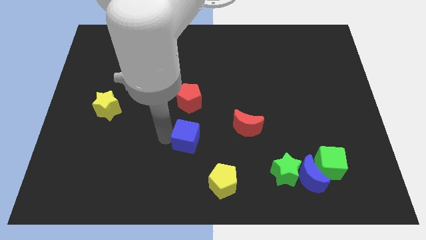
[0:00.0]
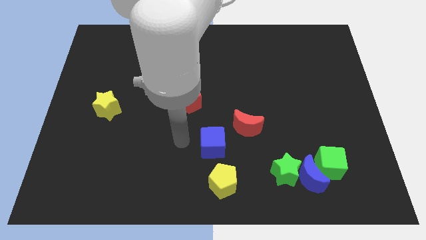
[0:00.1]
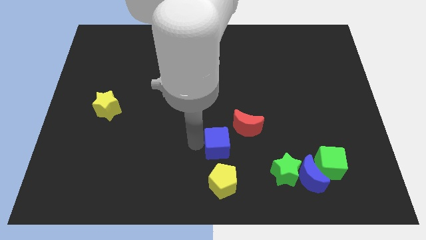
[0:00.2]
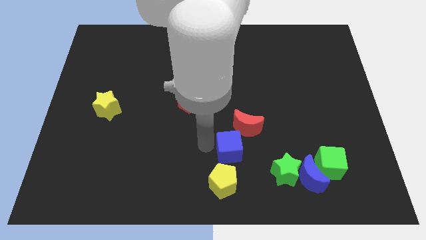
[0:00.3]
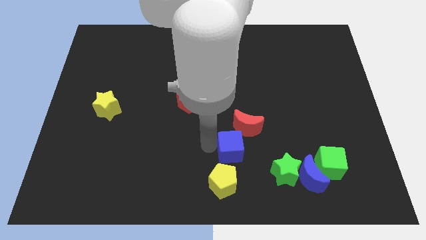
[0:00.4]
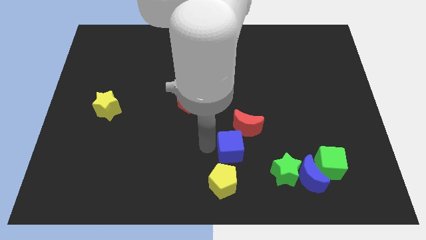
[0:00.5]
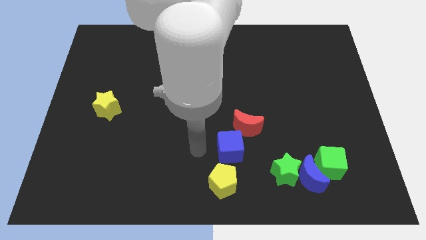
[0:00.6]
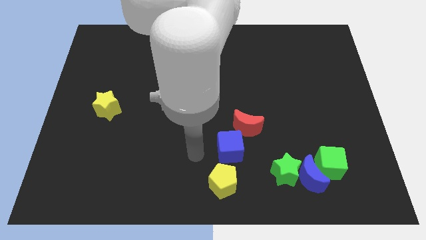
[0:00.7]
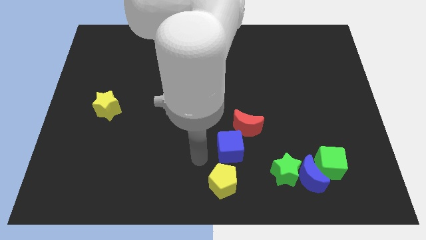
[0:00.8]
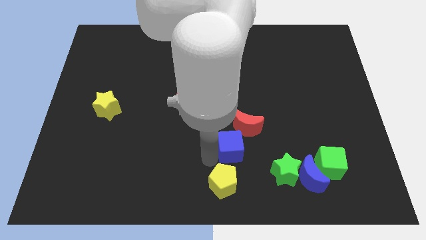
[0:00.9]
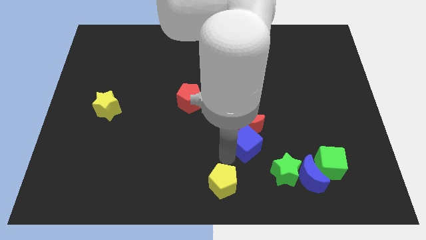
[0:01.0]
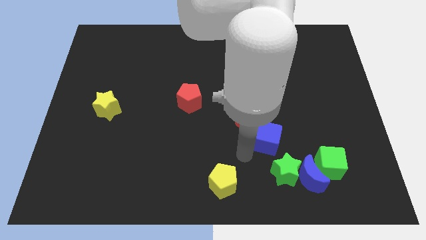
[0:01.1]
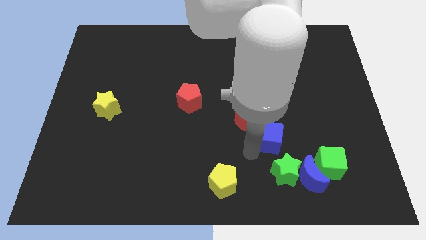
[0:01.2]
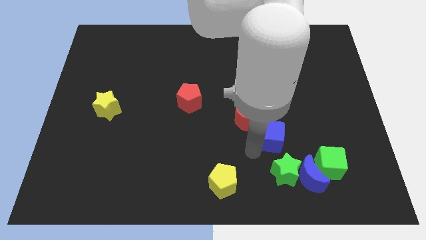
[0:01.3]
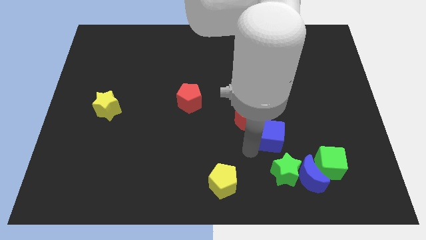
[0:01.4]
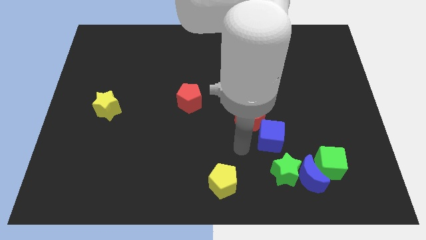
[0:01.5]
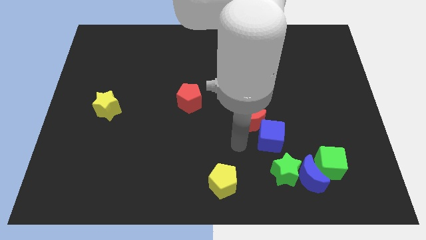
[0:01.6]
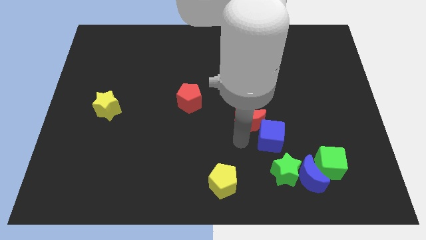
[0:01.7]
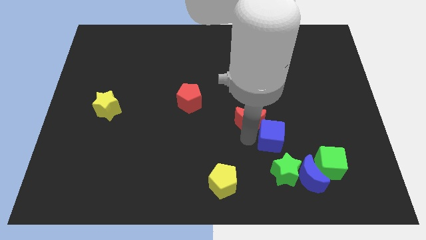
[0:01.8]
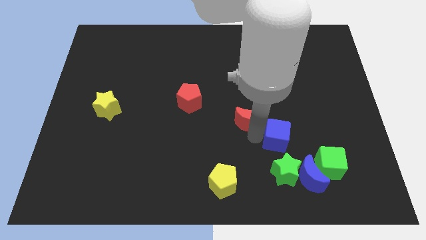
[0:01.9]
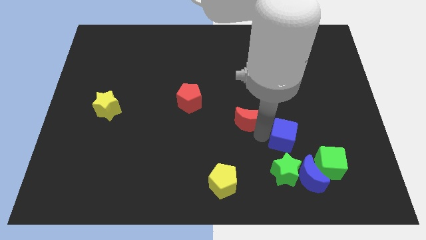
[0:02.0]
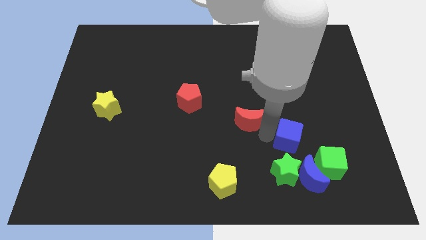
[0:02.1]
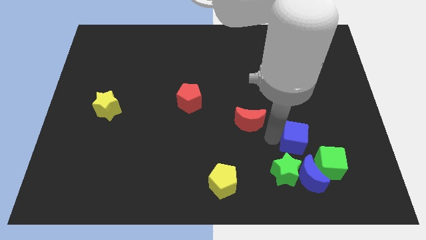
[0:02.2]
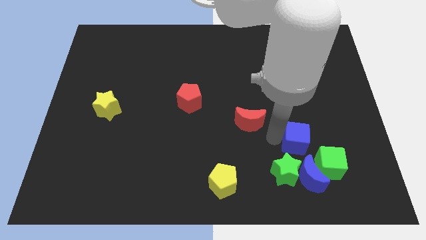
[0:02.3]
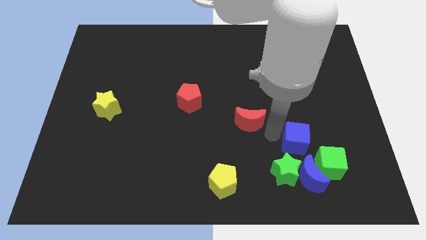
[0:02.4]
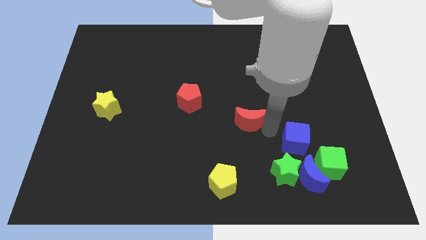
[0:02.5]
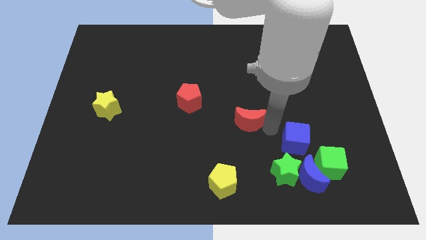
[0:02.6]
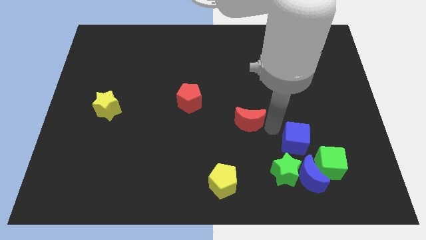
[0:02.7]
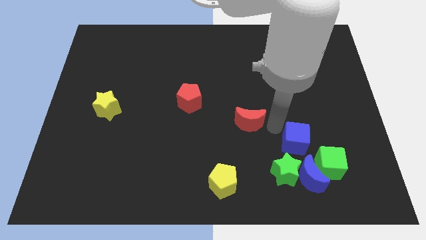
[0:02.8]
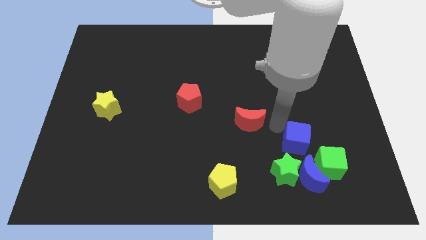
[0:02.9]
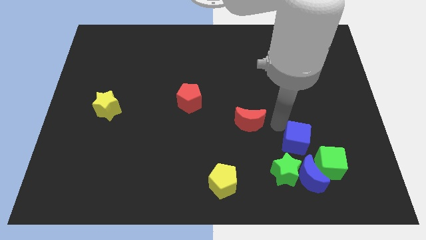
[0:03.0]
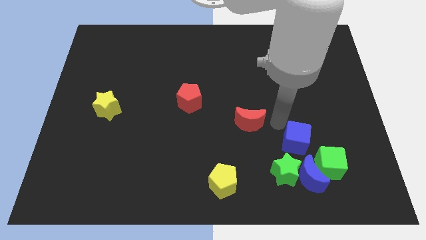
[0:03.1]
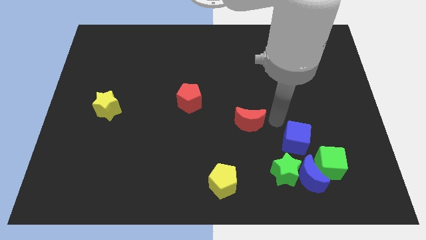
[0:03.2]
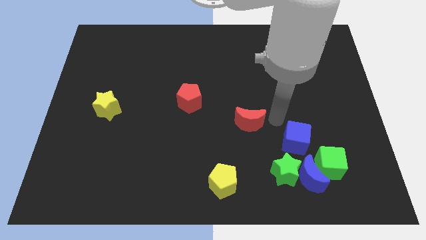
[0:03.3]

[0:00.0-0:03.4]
push the blue cube close to the green cube

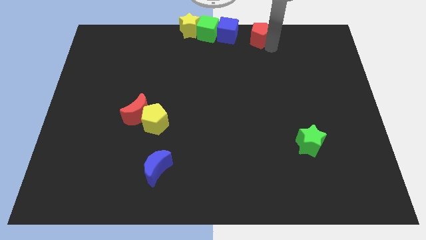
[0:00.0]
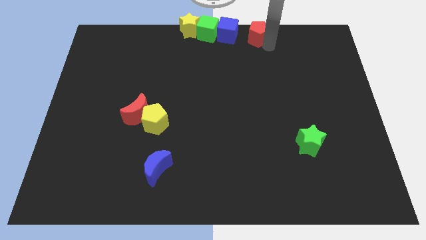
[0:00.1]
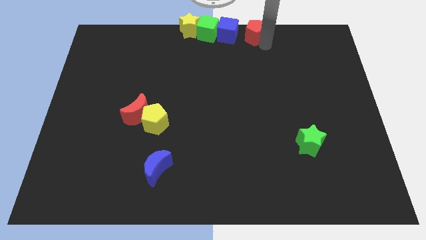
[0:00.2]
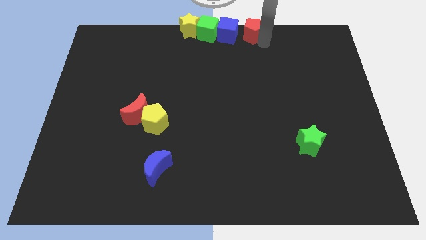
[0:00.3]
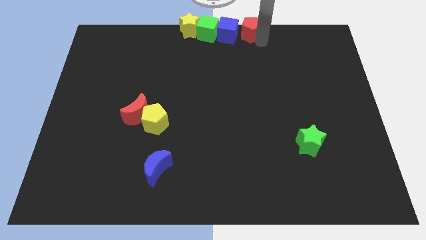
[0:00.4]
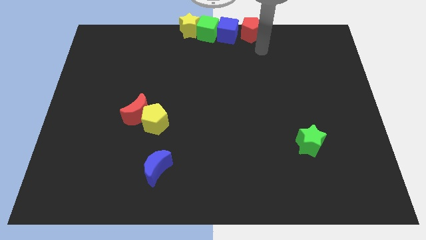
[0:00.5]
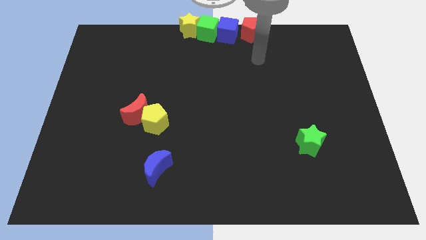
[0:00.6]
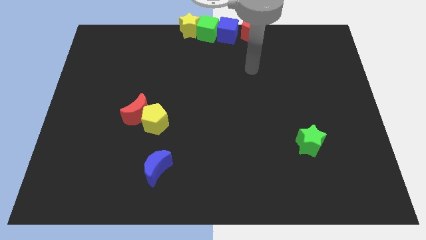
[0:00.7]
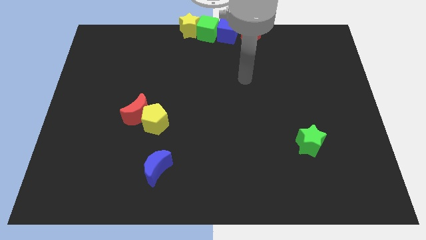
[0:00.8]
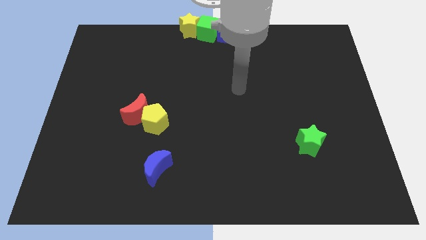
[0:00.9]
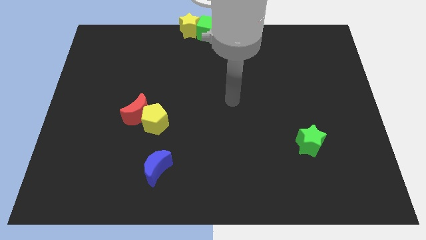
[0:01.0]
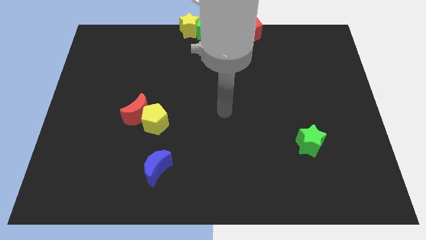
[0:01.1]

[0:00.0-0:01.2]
place the red pentagon to the right of the blue cube

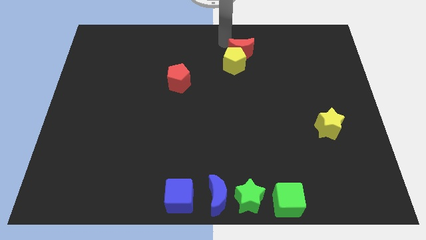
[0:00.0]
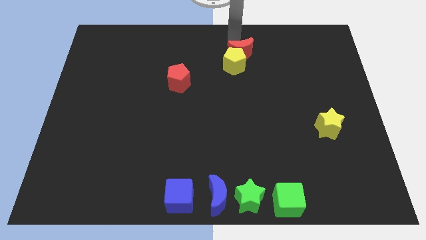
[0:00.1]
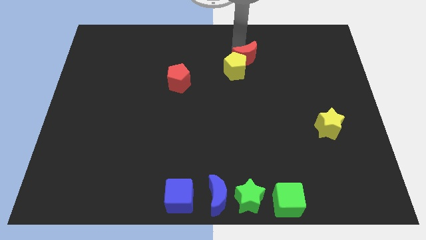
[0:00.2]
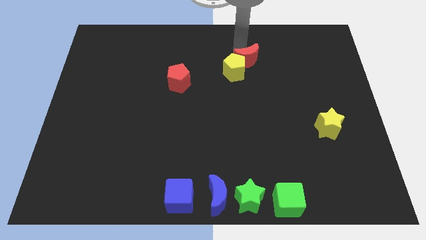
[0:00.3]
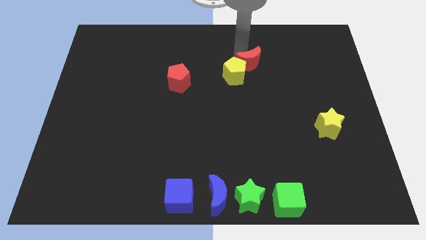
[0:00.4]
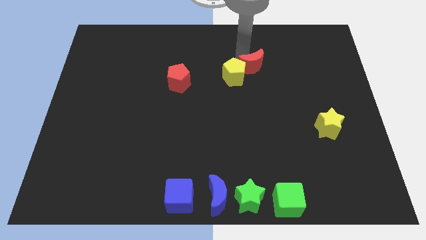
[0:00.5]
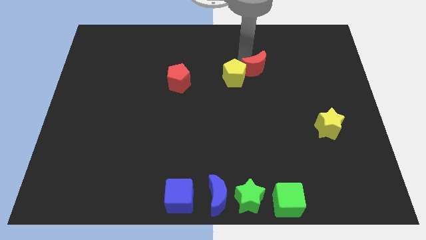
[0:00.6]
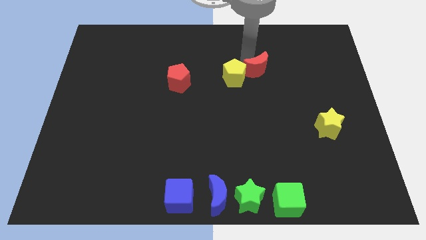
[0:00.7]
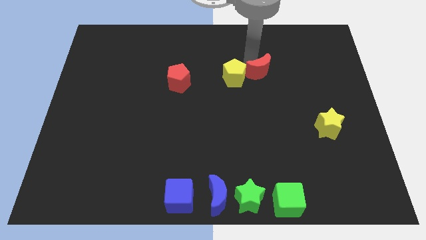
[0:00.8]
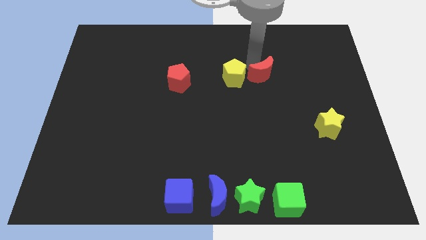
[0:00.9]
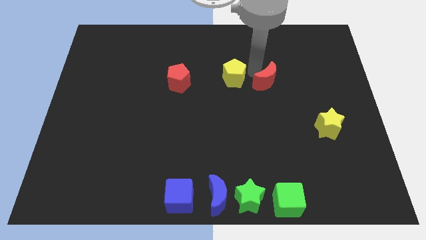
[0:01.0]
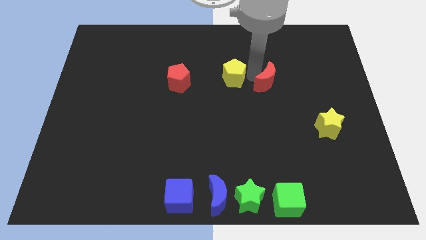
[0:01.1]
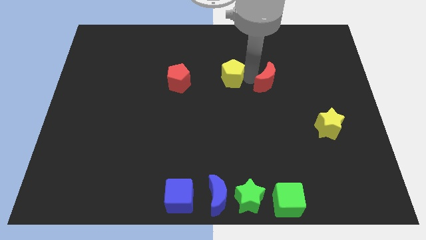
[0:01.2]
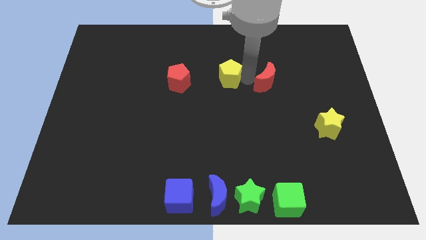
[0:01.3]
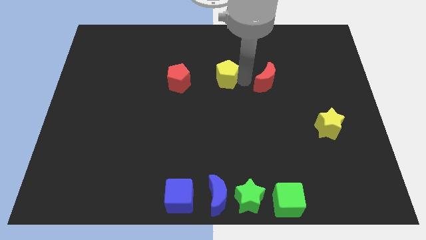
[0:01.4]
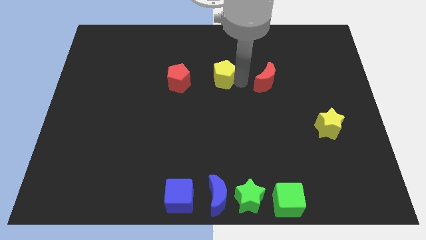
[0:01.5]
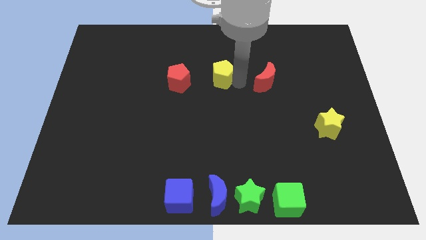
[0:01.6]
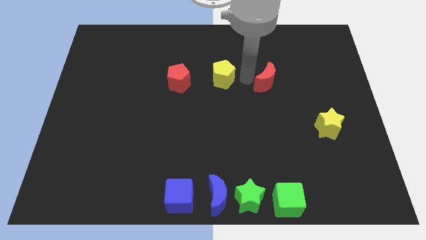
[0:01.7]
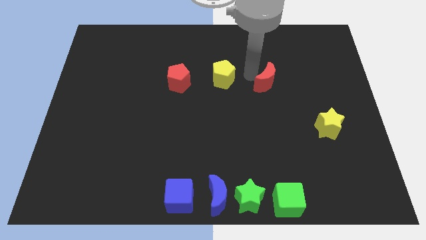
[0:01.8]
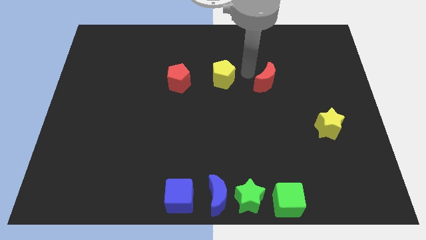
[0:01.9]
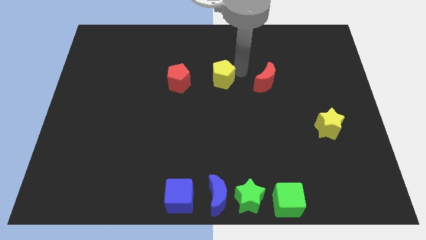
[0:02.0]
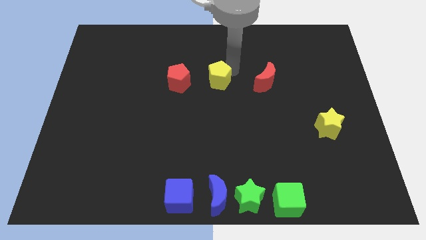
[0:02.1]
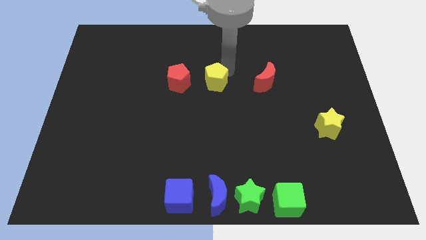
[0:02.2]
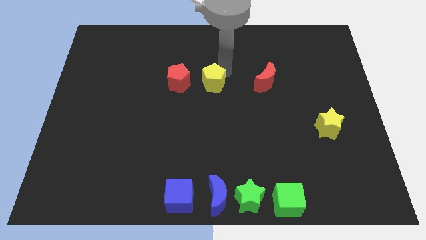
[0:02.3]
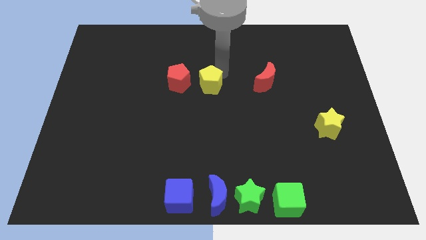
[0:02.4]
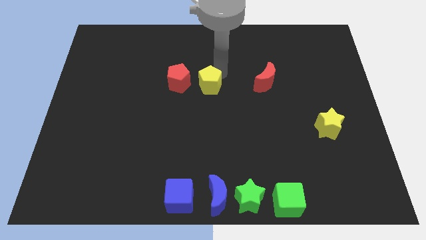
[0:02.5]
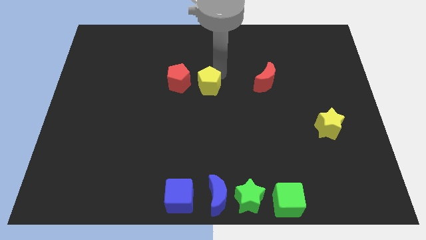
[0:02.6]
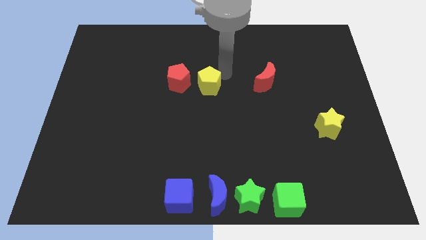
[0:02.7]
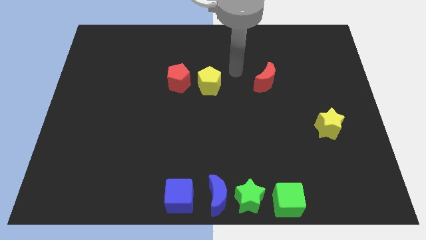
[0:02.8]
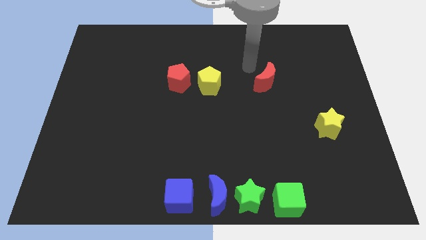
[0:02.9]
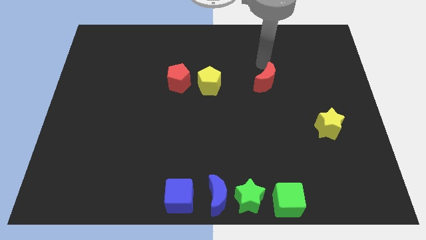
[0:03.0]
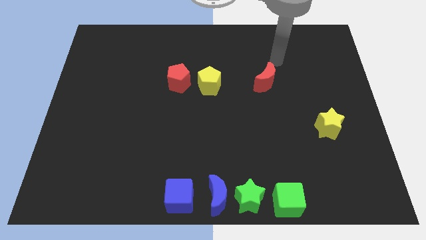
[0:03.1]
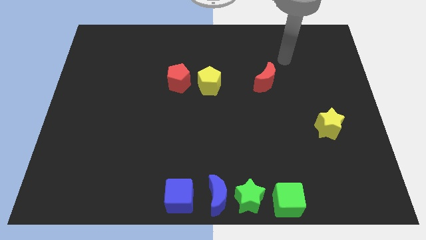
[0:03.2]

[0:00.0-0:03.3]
move the yellow pentagon to the right of the red pentagon

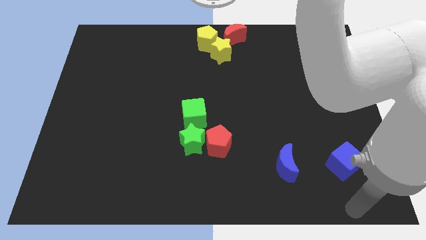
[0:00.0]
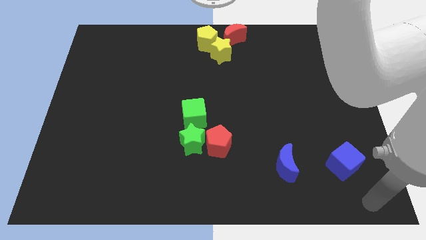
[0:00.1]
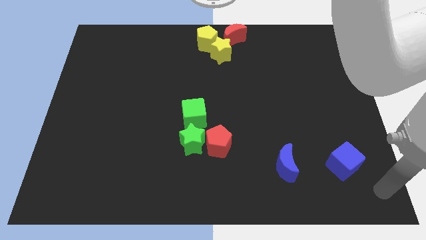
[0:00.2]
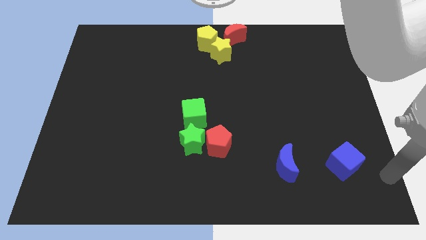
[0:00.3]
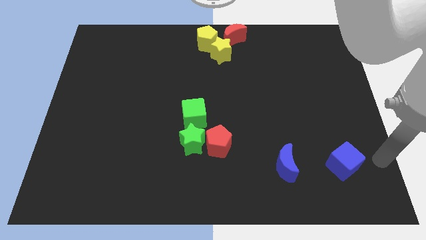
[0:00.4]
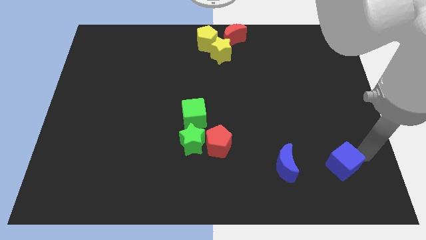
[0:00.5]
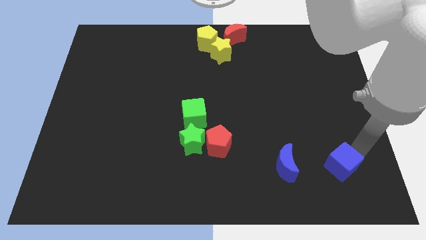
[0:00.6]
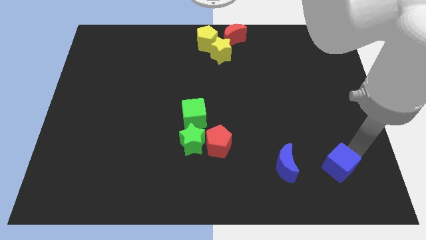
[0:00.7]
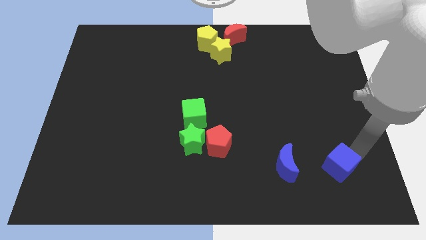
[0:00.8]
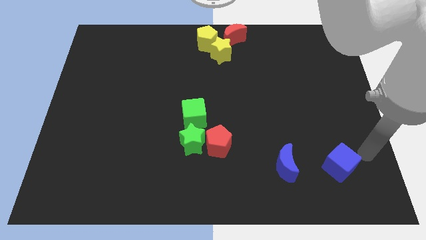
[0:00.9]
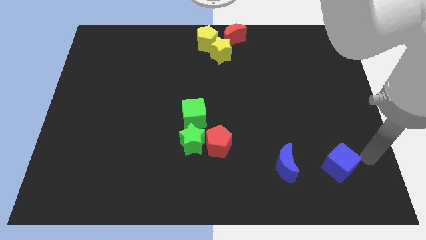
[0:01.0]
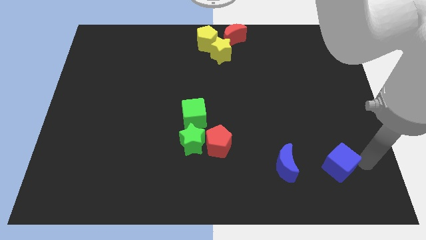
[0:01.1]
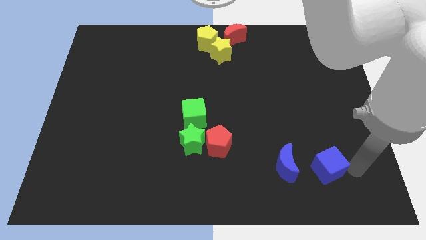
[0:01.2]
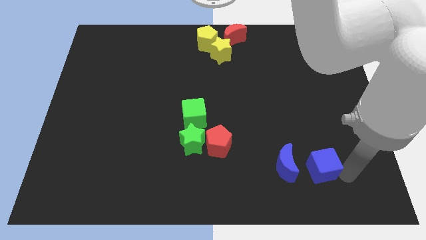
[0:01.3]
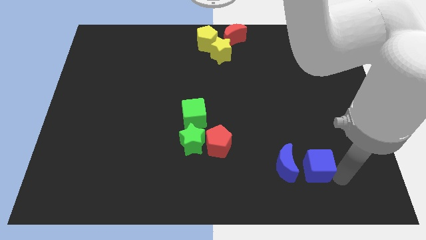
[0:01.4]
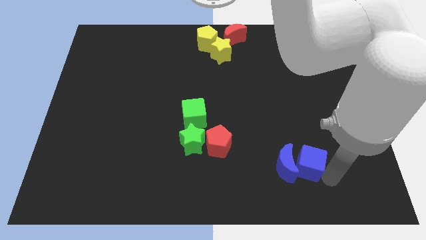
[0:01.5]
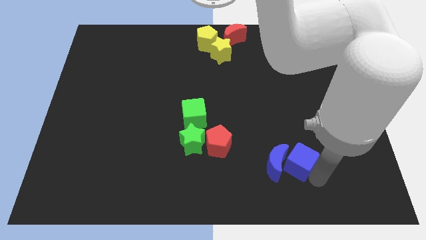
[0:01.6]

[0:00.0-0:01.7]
push the blue cube towards the blue moon
